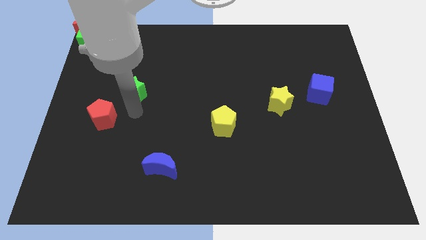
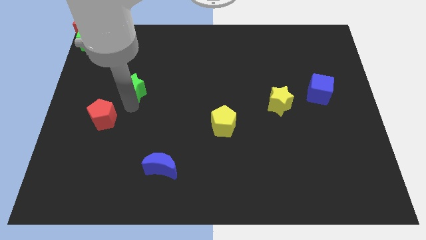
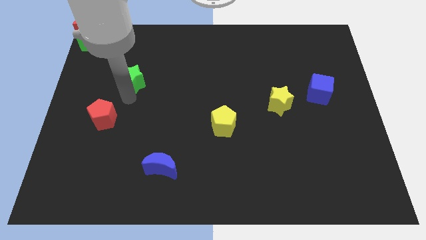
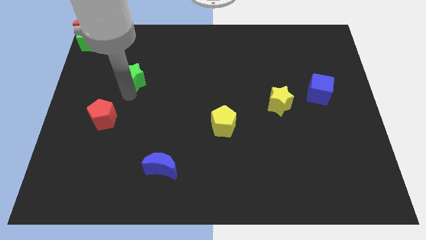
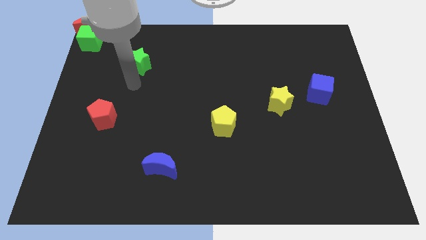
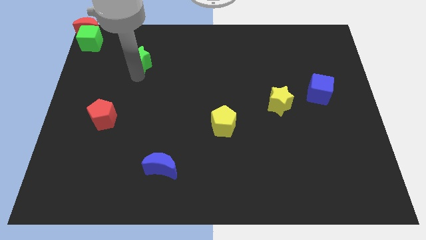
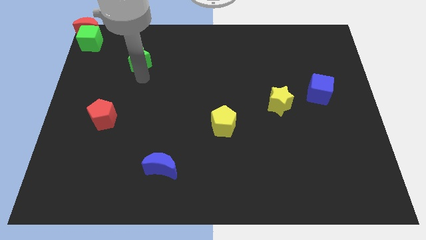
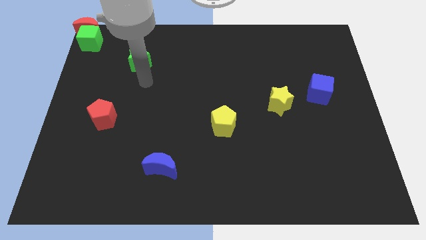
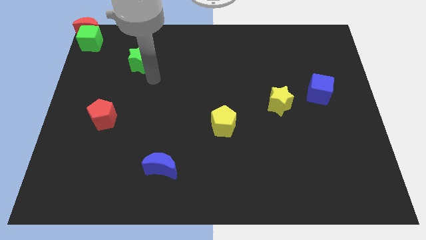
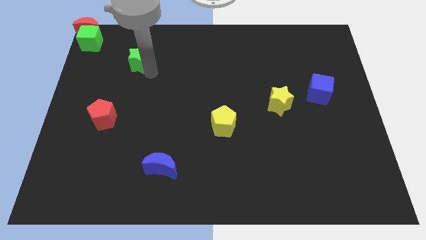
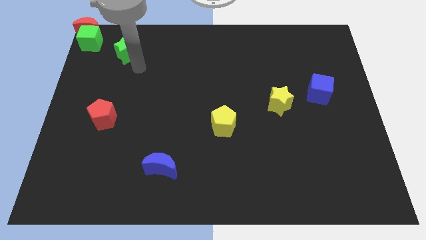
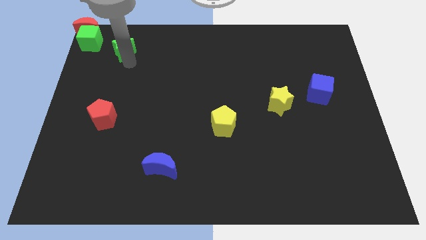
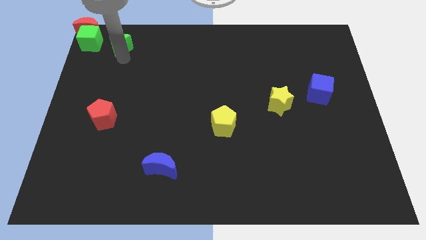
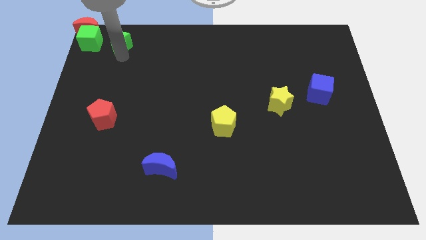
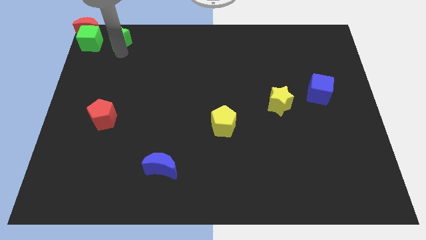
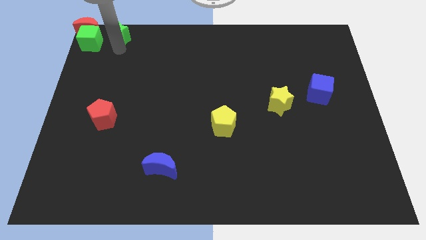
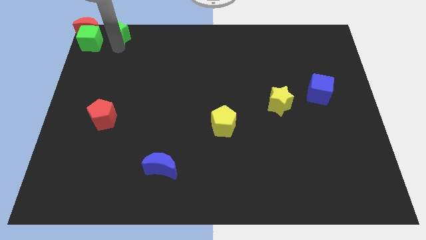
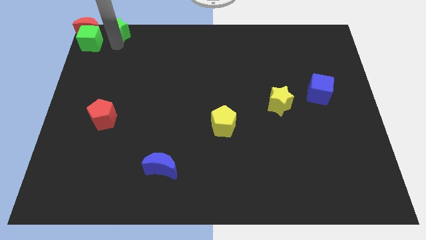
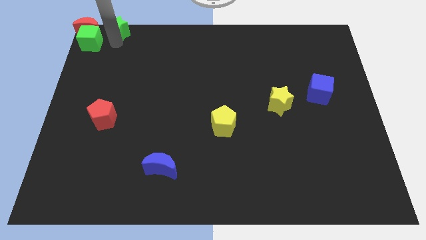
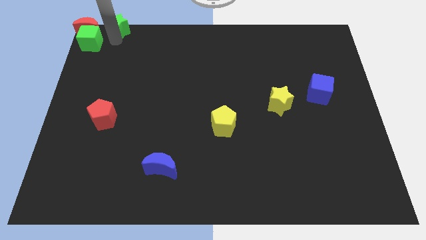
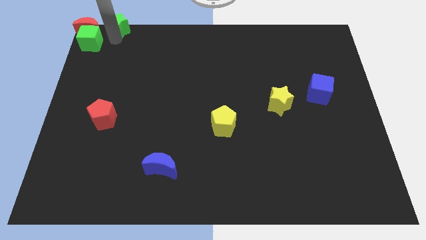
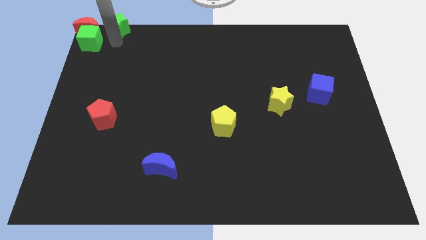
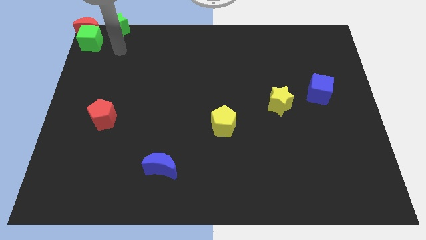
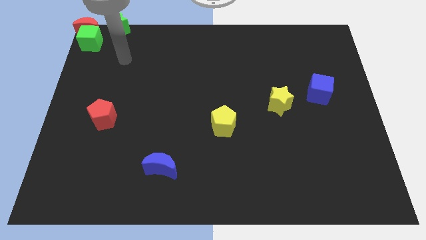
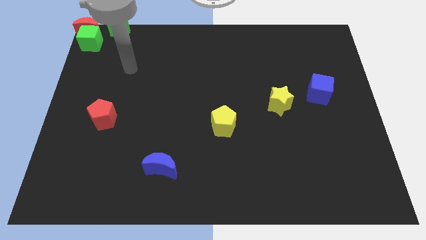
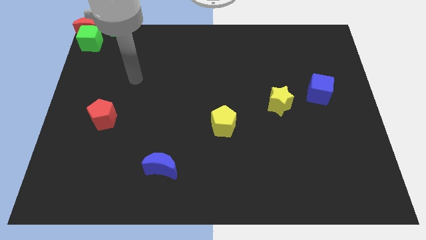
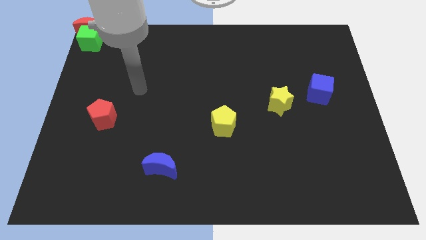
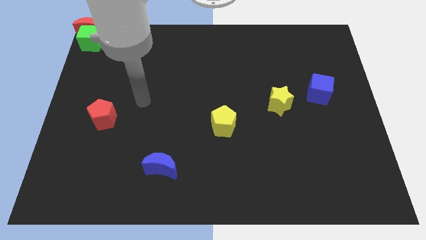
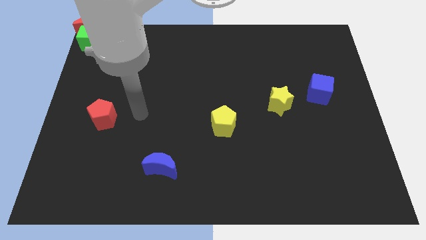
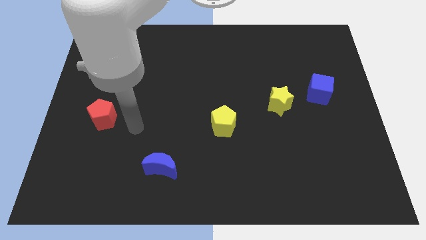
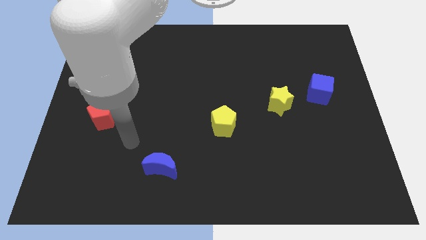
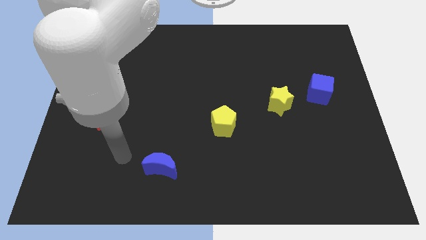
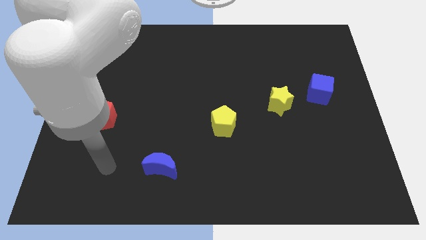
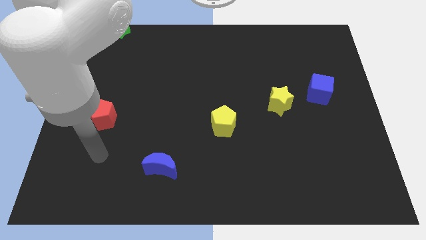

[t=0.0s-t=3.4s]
push the green star to the right side of the red crescent

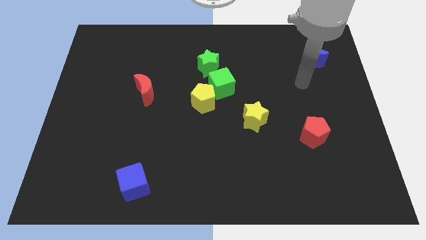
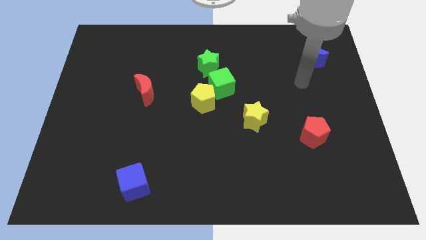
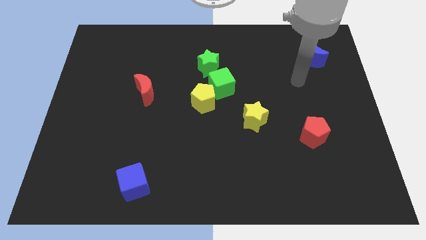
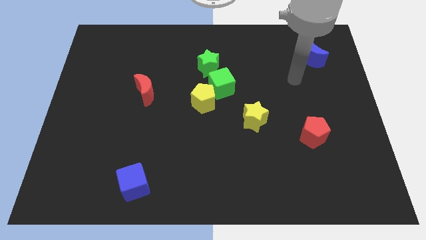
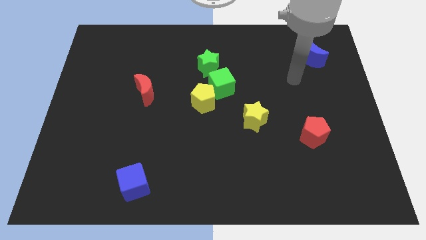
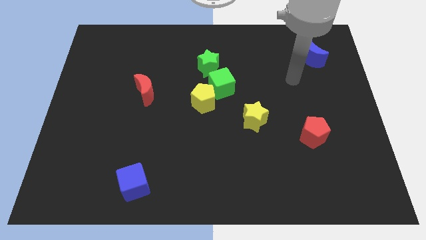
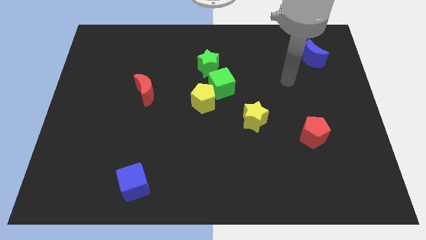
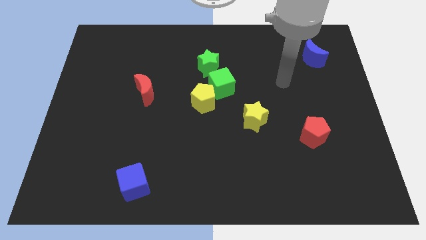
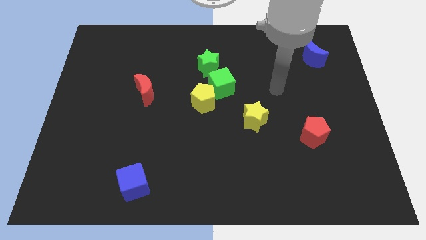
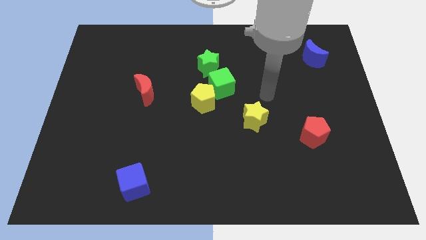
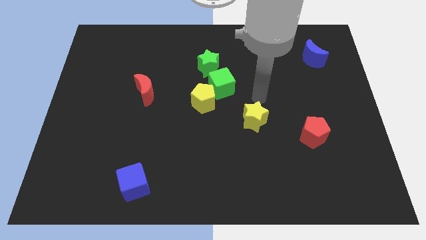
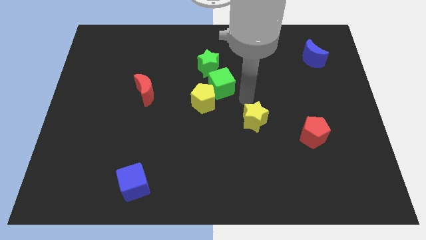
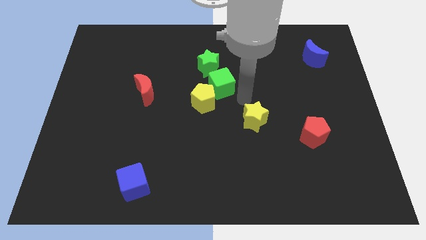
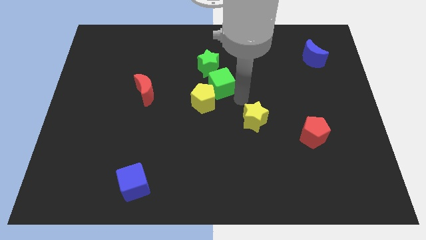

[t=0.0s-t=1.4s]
place the arm diagonal to the green cube

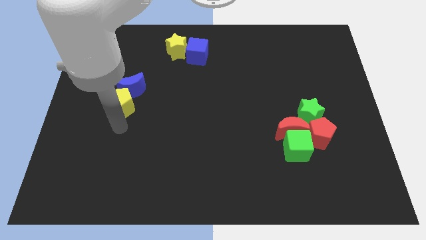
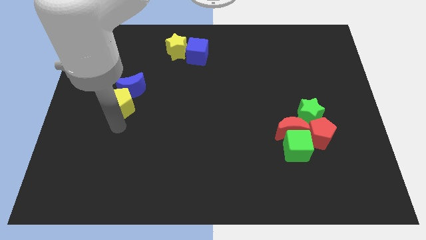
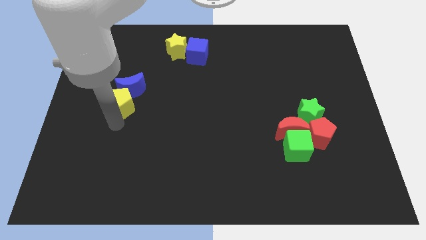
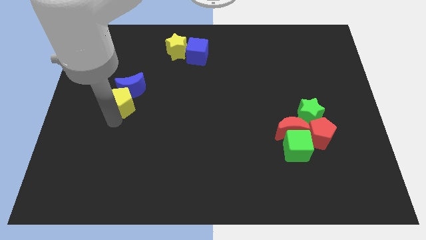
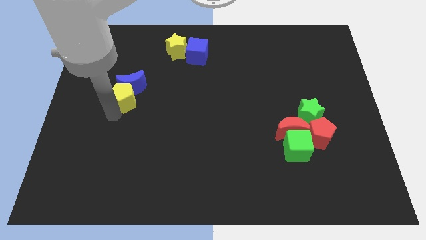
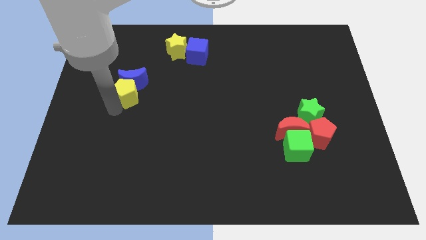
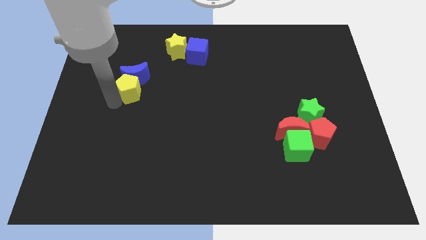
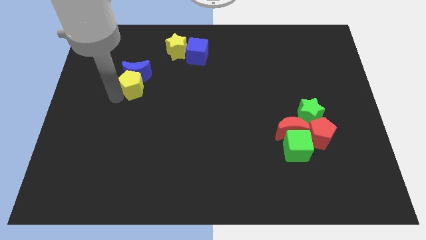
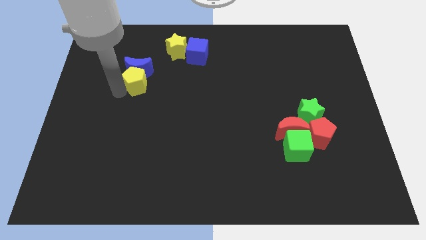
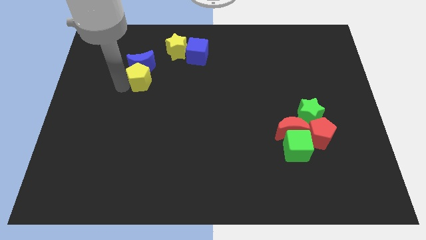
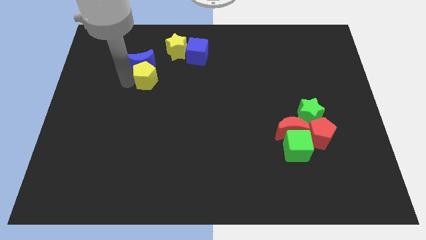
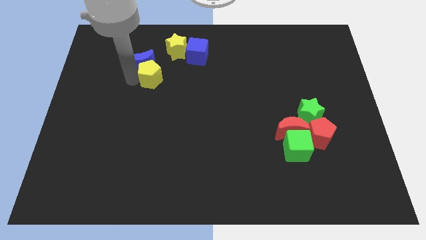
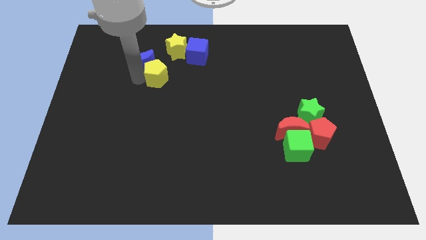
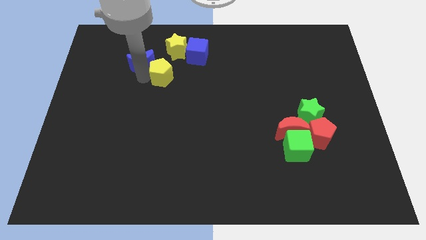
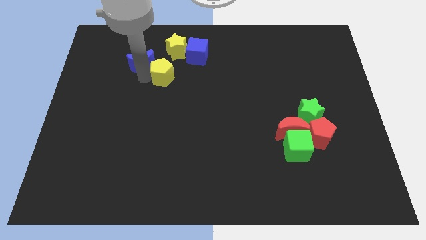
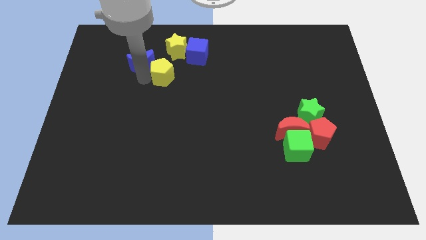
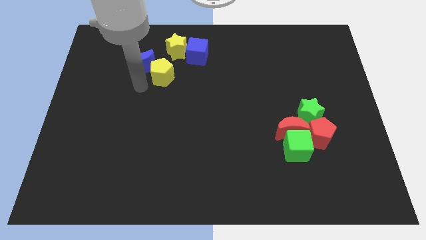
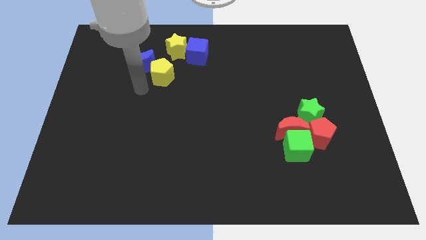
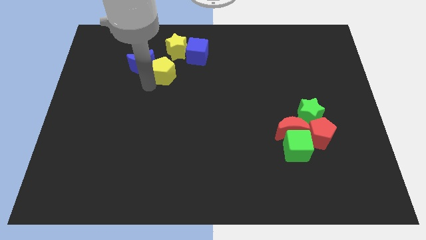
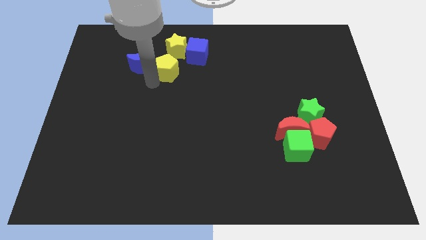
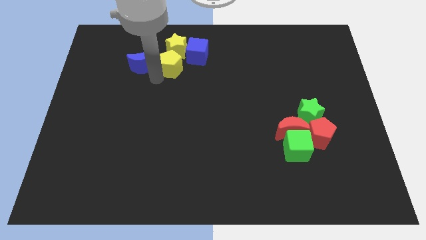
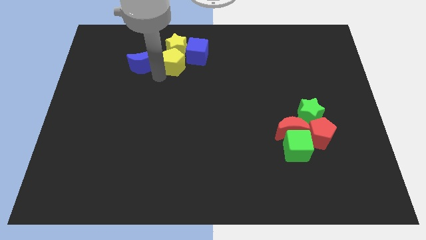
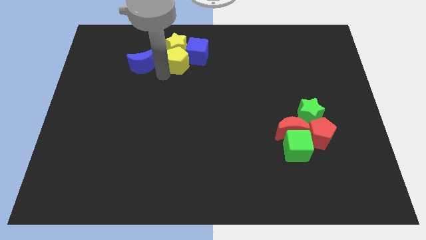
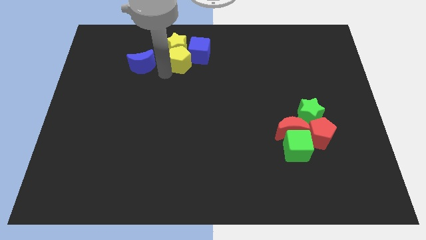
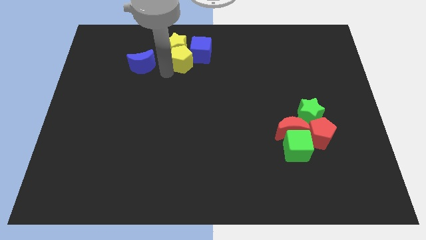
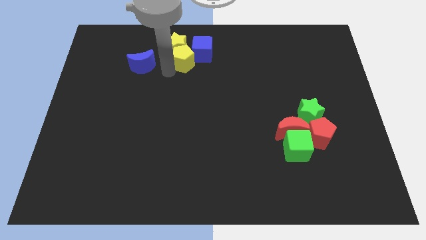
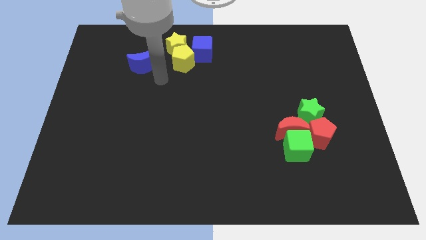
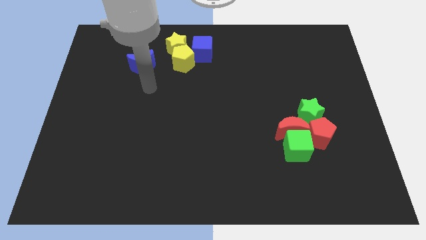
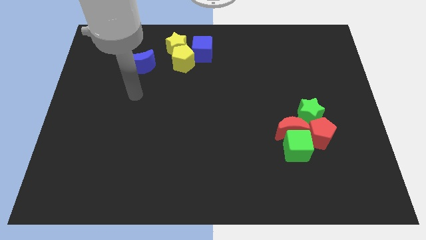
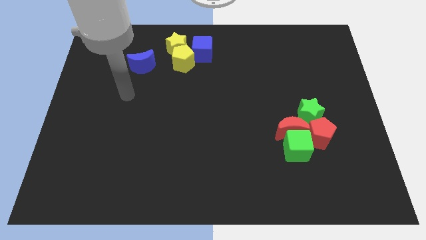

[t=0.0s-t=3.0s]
move the yellow pentagon into the yellow star

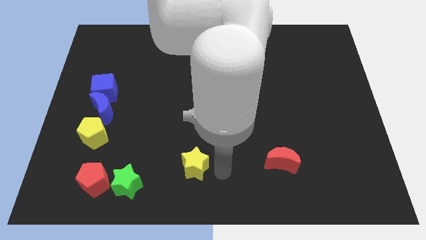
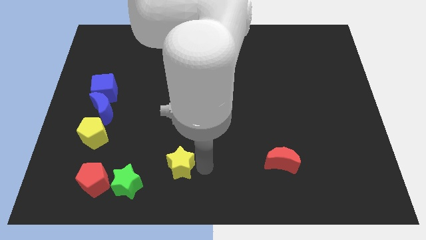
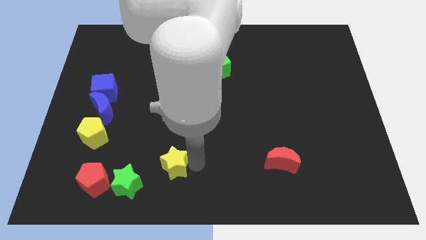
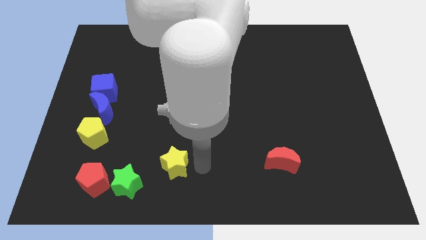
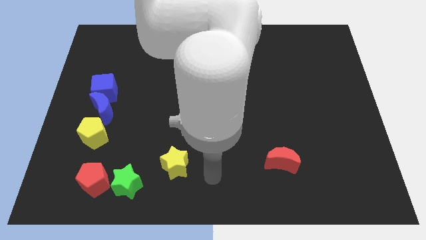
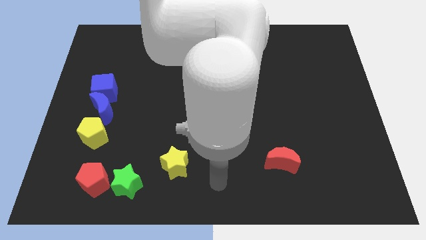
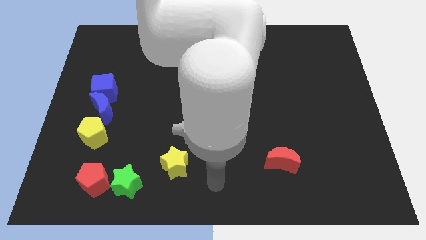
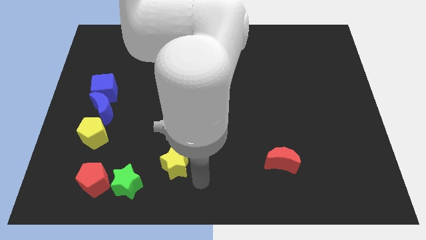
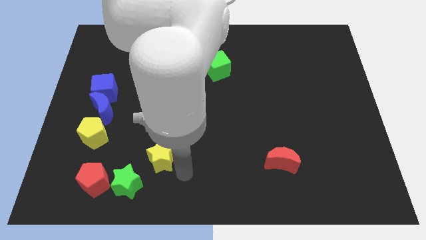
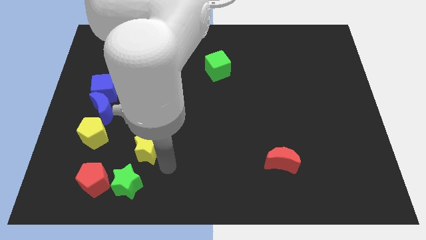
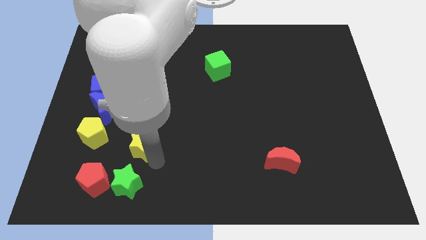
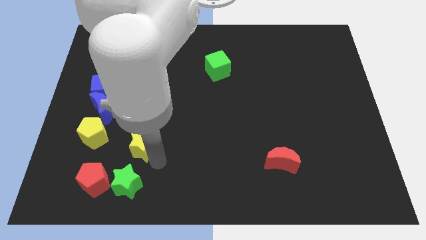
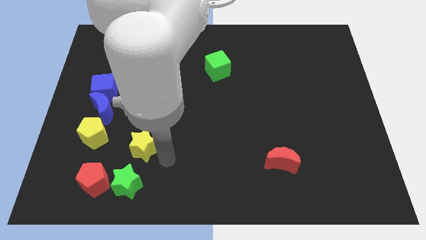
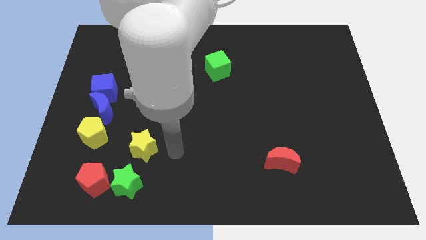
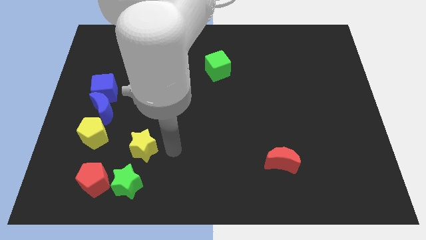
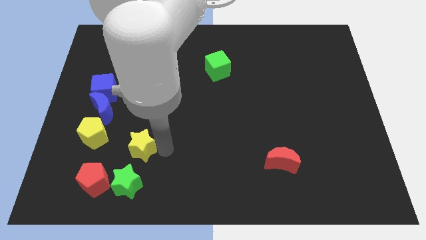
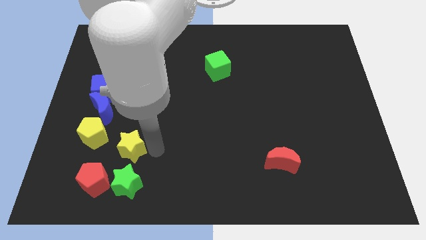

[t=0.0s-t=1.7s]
put the yellow star above the green star
